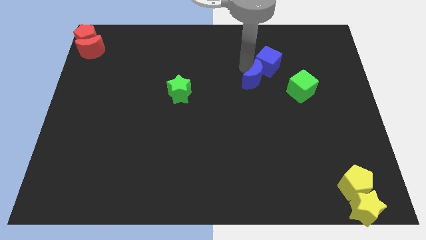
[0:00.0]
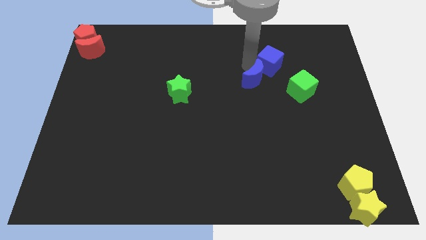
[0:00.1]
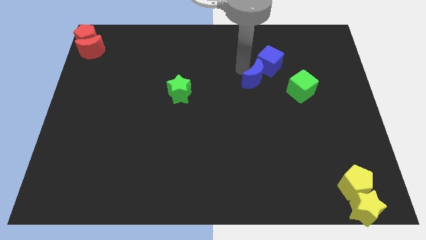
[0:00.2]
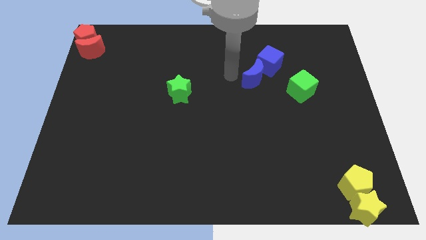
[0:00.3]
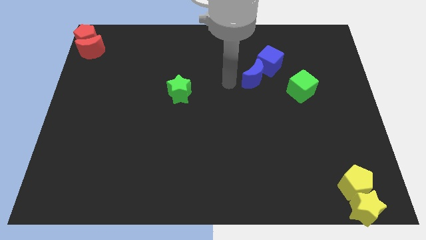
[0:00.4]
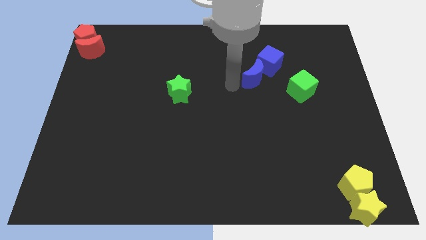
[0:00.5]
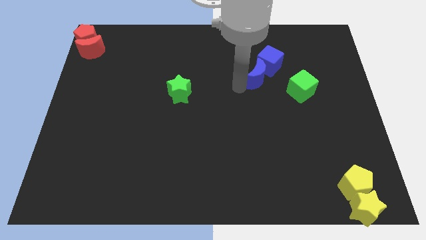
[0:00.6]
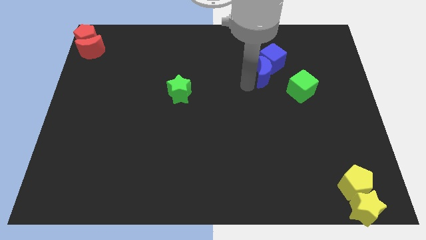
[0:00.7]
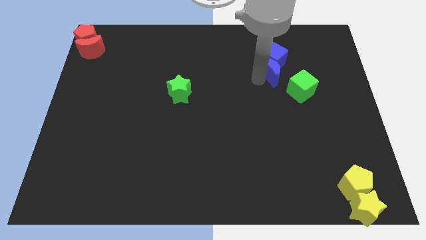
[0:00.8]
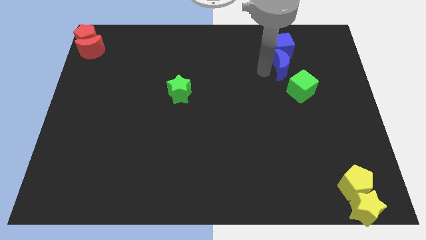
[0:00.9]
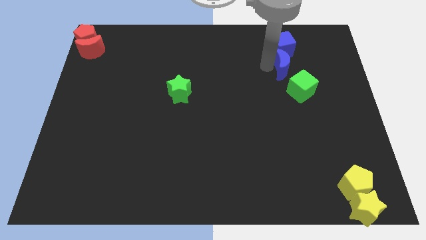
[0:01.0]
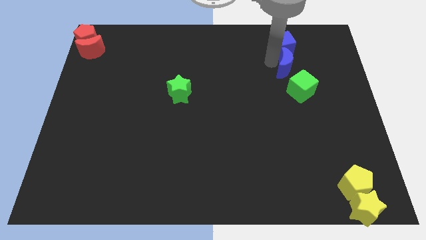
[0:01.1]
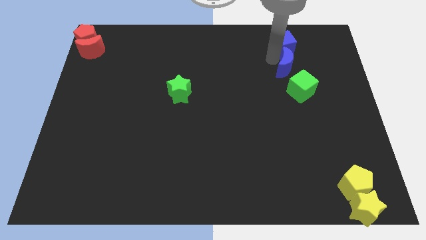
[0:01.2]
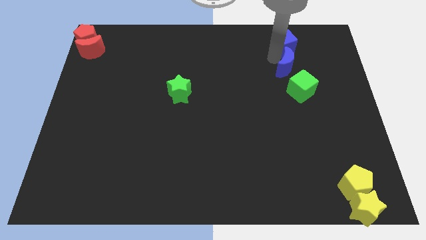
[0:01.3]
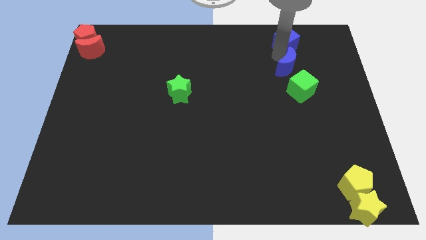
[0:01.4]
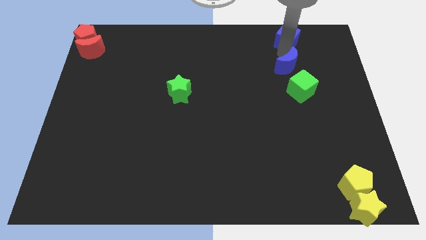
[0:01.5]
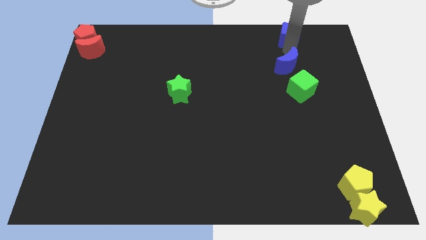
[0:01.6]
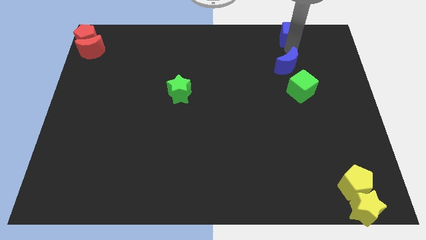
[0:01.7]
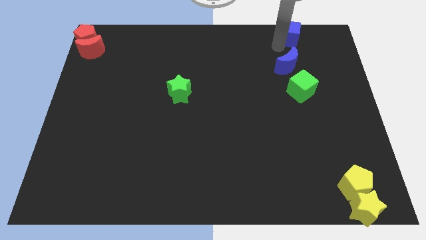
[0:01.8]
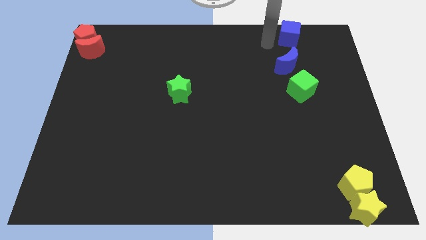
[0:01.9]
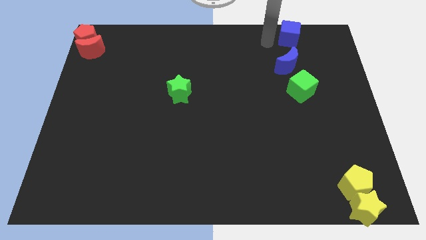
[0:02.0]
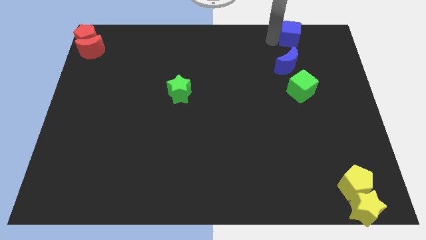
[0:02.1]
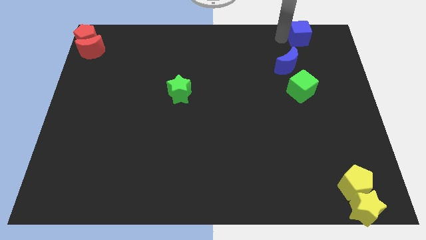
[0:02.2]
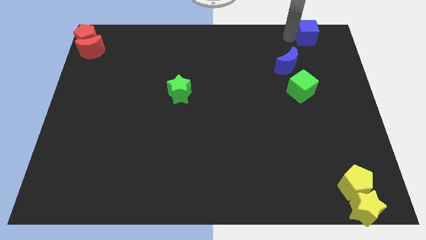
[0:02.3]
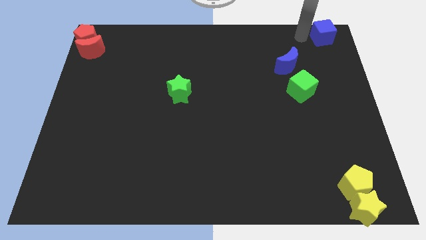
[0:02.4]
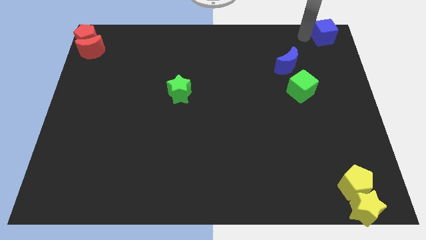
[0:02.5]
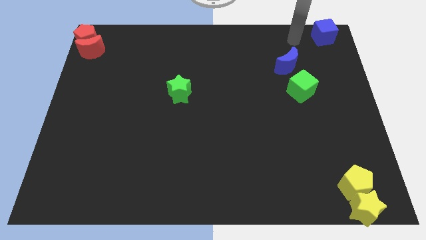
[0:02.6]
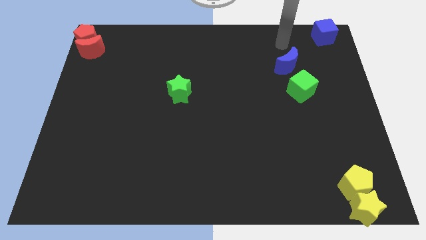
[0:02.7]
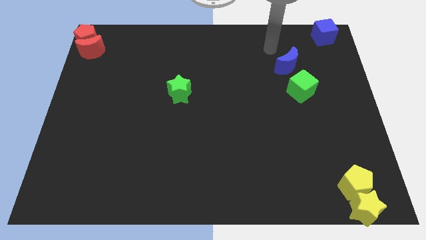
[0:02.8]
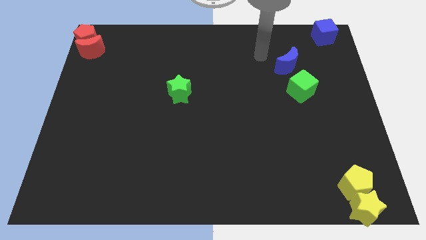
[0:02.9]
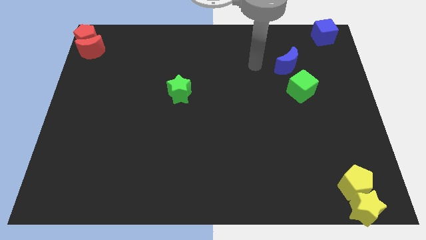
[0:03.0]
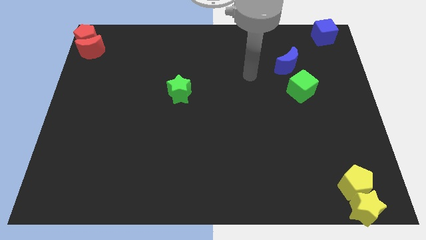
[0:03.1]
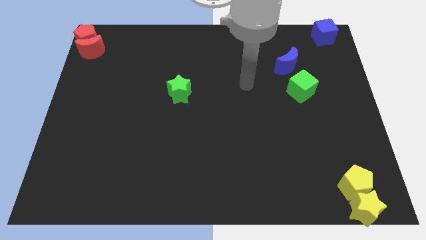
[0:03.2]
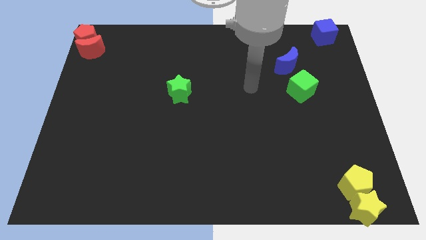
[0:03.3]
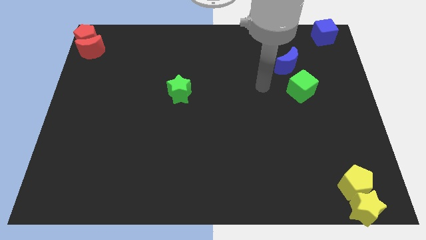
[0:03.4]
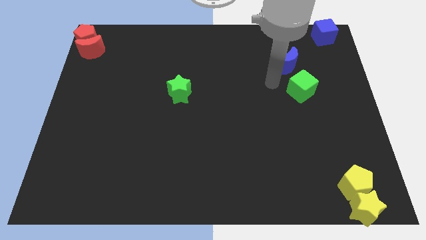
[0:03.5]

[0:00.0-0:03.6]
move the blue cube to the top right of the board

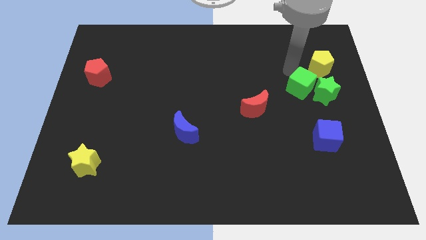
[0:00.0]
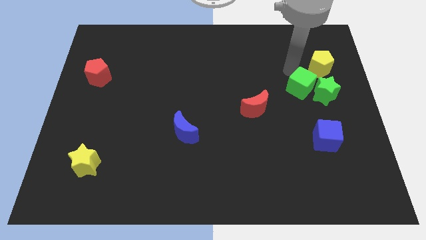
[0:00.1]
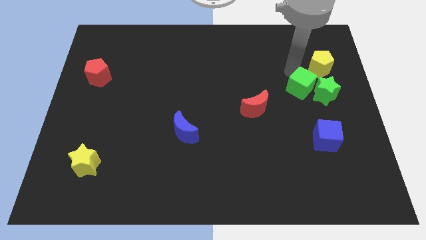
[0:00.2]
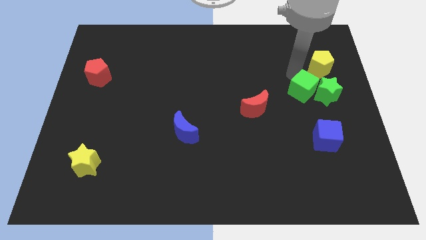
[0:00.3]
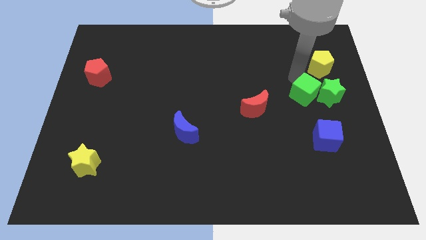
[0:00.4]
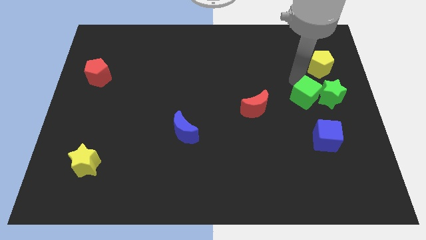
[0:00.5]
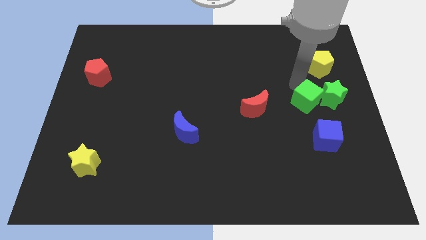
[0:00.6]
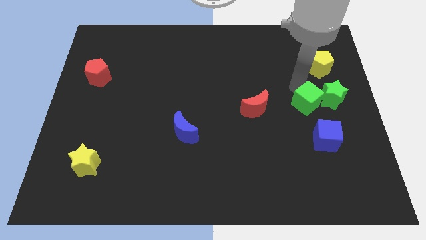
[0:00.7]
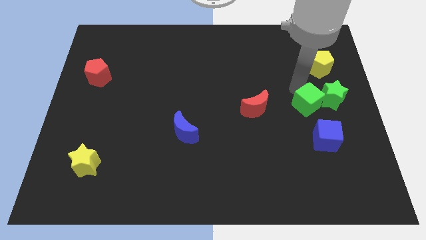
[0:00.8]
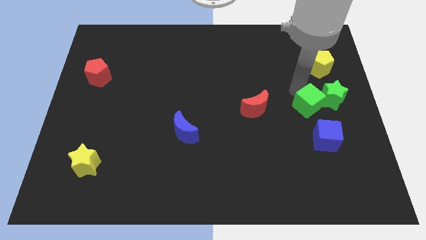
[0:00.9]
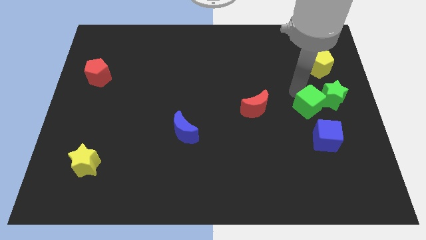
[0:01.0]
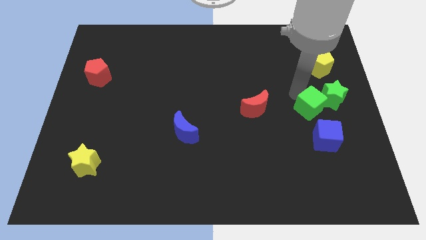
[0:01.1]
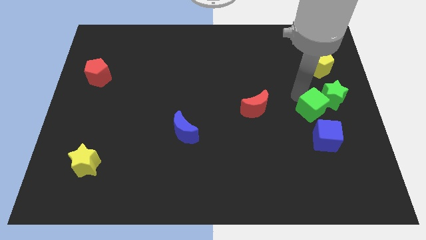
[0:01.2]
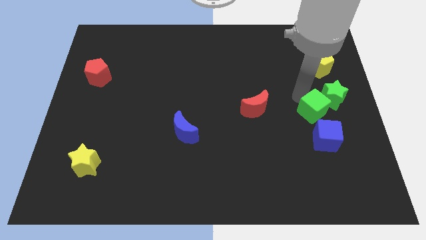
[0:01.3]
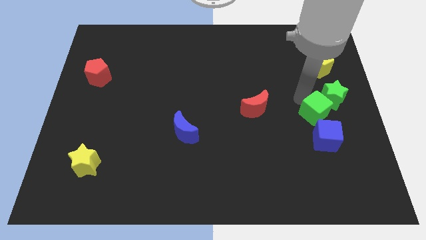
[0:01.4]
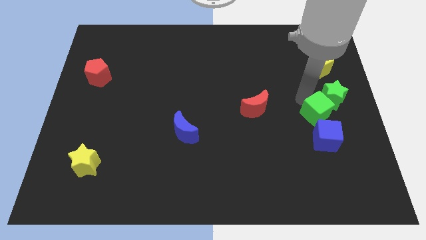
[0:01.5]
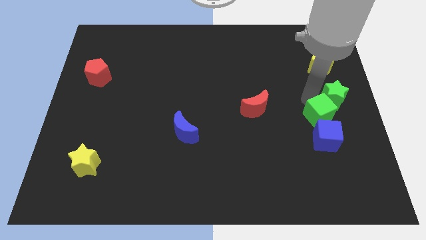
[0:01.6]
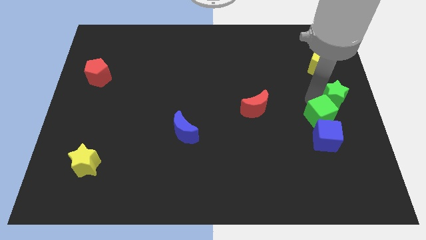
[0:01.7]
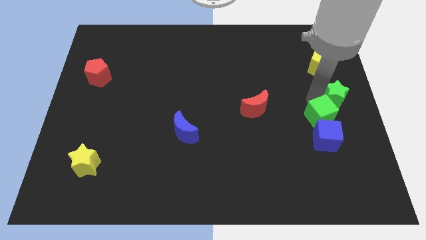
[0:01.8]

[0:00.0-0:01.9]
move the green cube towards the blue cube

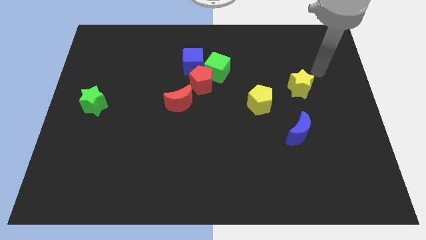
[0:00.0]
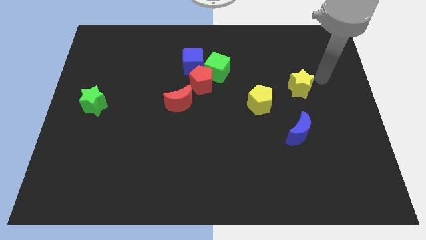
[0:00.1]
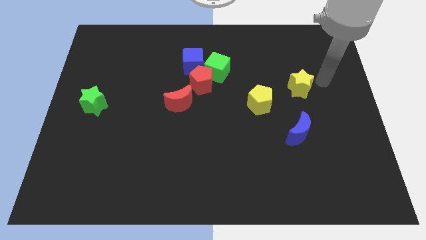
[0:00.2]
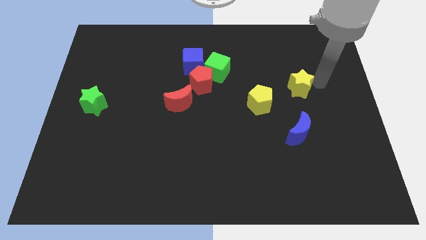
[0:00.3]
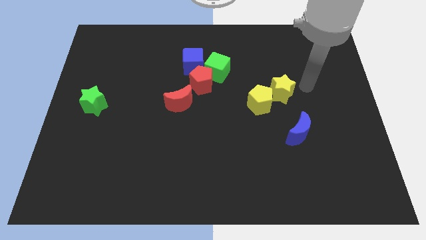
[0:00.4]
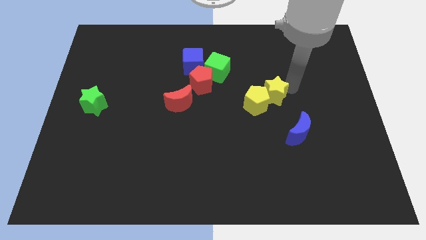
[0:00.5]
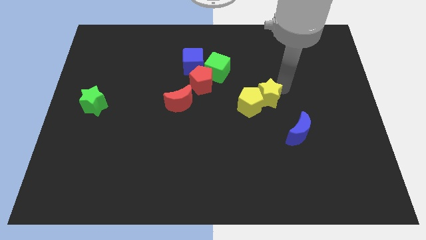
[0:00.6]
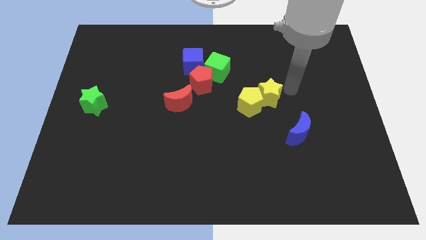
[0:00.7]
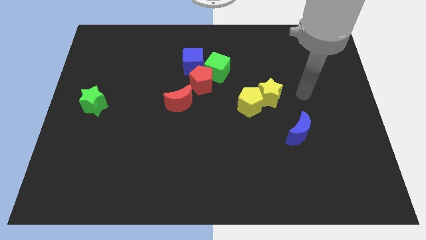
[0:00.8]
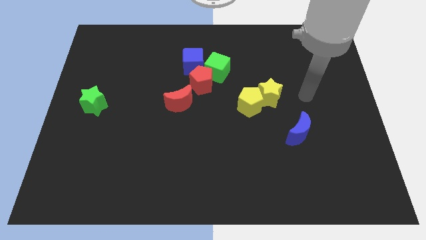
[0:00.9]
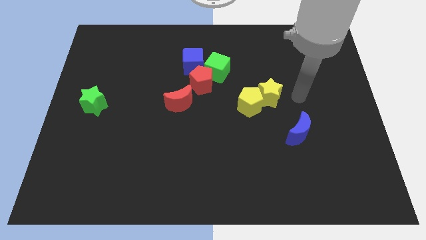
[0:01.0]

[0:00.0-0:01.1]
push the yellow star into the yellow pentagon

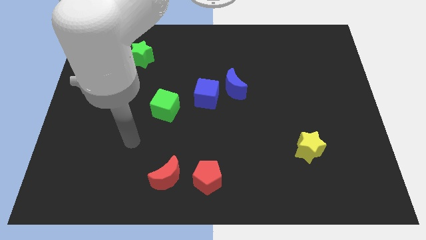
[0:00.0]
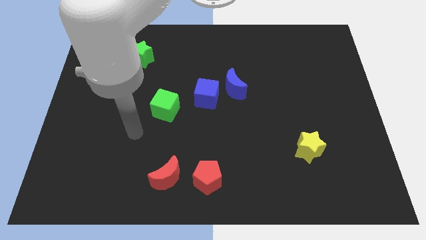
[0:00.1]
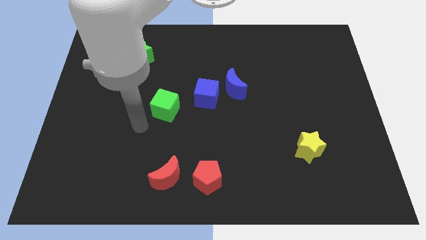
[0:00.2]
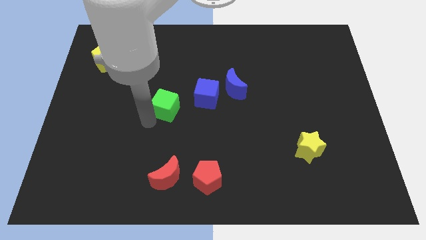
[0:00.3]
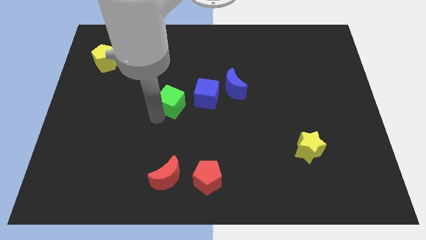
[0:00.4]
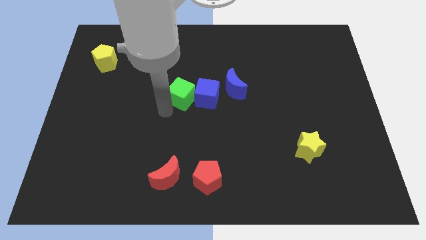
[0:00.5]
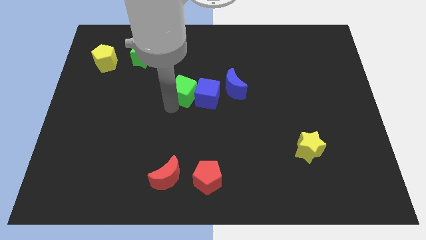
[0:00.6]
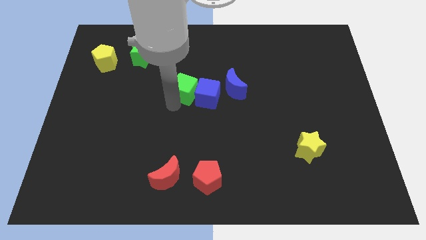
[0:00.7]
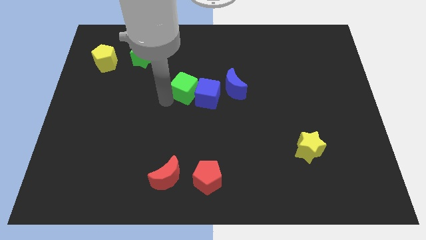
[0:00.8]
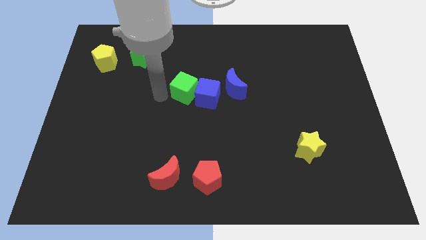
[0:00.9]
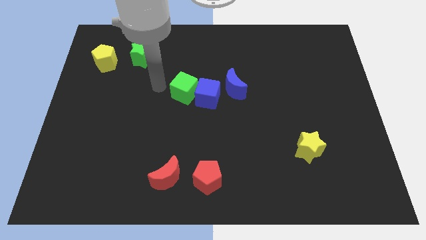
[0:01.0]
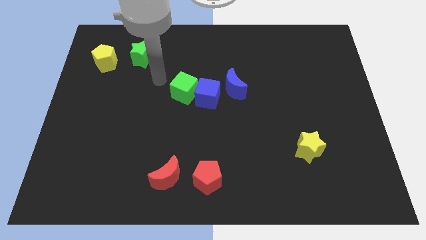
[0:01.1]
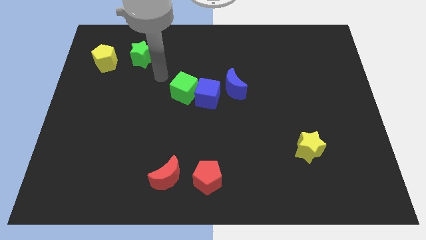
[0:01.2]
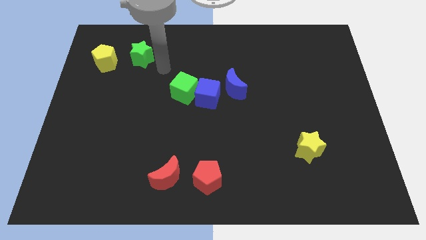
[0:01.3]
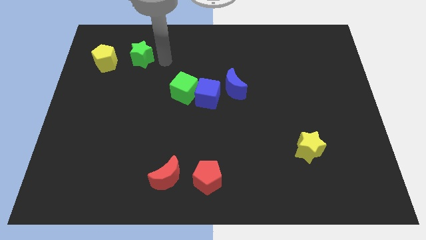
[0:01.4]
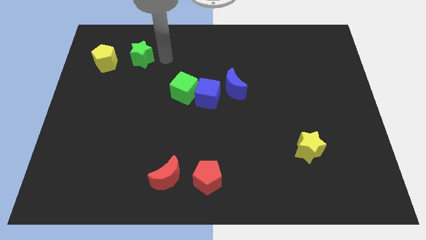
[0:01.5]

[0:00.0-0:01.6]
push the green cube into the blue cube

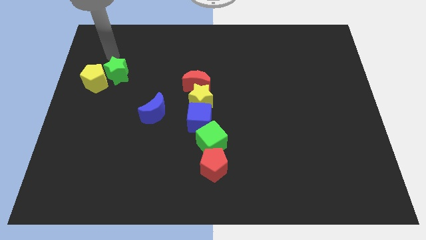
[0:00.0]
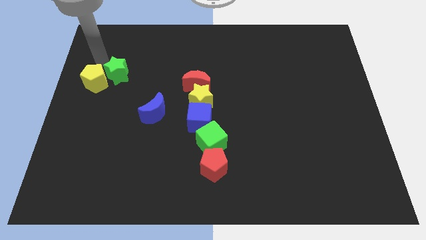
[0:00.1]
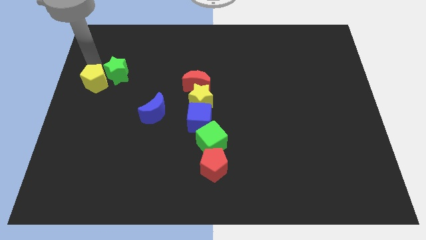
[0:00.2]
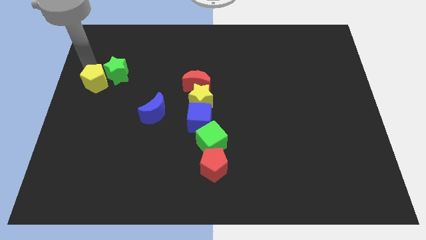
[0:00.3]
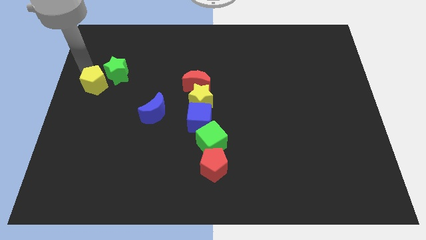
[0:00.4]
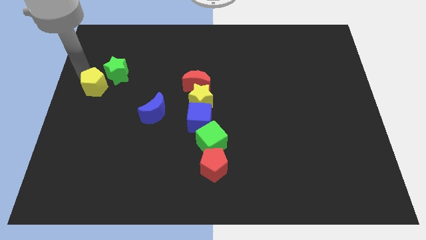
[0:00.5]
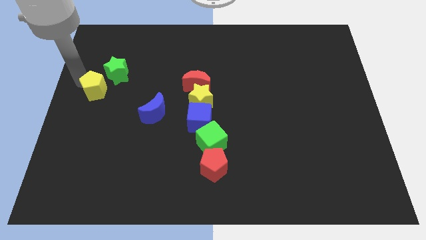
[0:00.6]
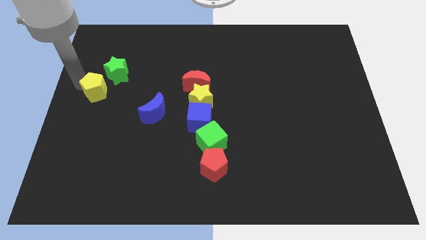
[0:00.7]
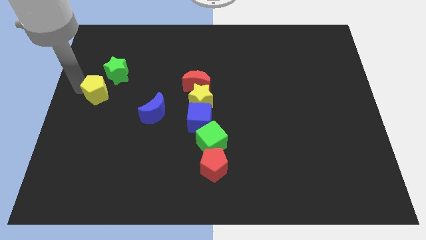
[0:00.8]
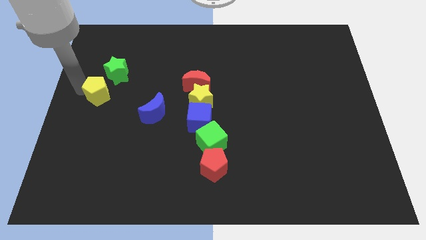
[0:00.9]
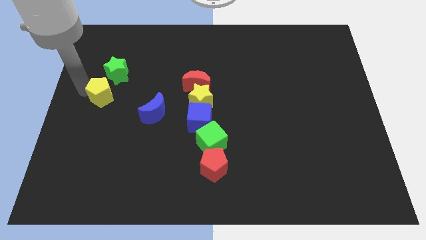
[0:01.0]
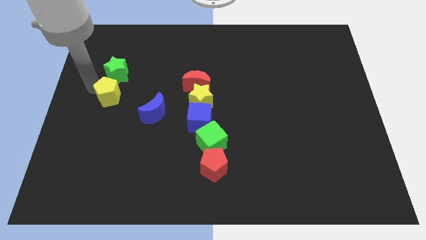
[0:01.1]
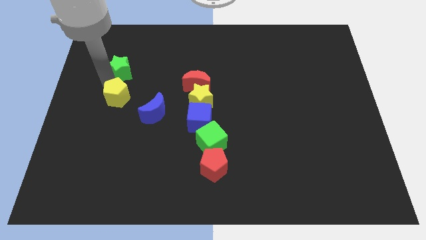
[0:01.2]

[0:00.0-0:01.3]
push the yellow pentagon below the green star
